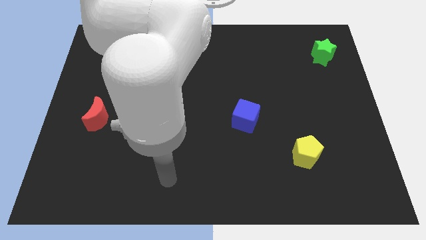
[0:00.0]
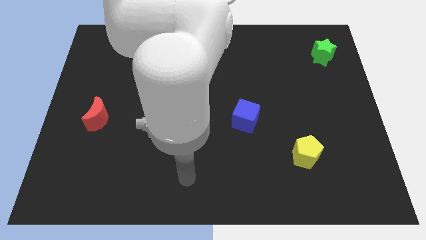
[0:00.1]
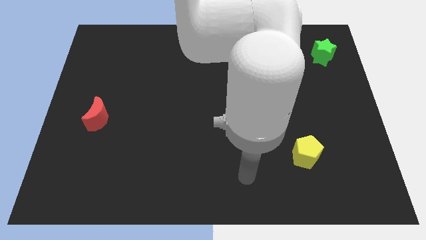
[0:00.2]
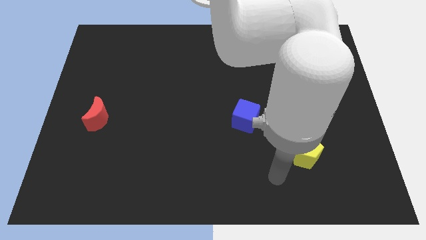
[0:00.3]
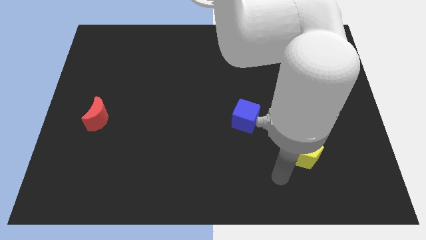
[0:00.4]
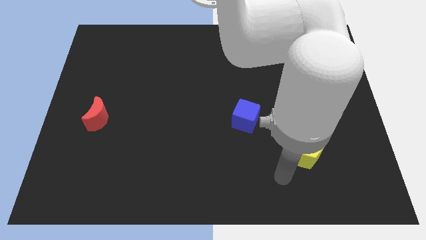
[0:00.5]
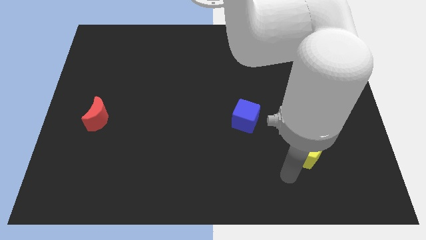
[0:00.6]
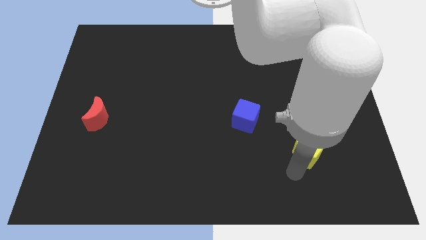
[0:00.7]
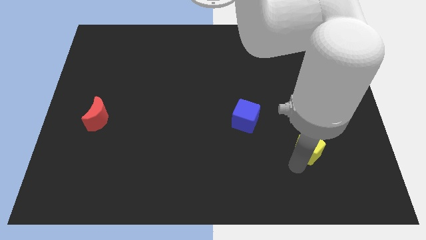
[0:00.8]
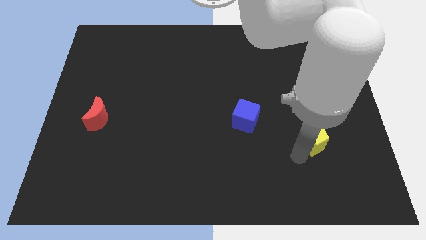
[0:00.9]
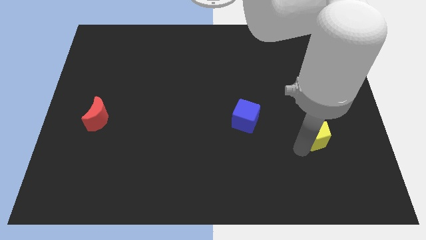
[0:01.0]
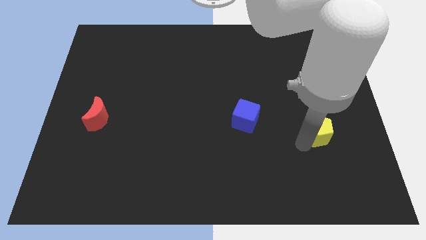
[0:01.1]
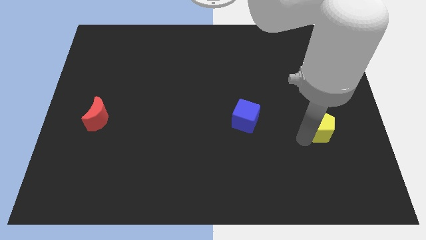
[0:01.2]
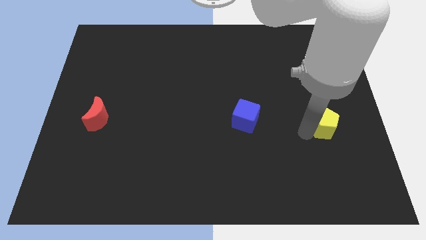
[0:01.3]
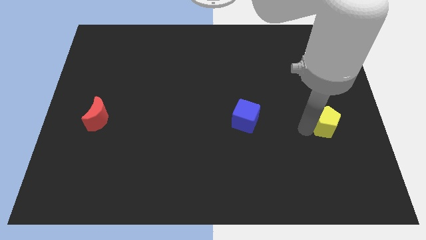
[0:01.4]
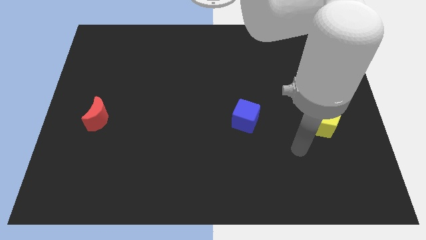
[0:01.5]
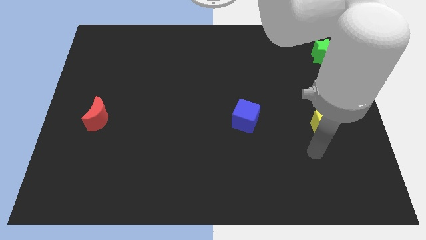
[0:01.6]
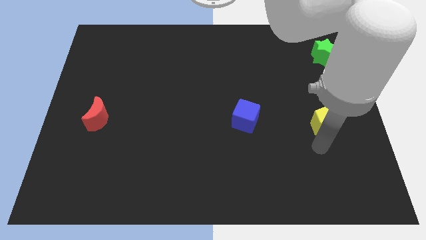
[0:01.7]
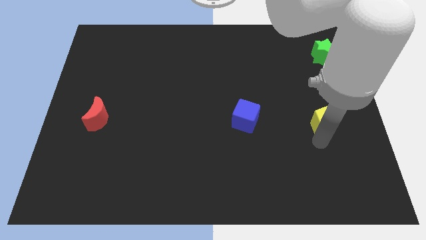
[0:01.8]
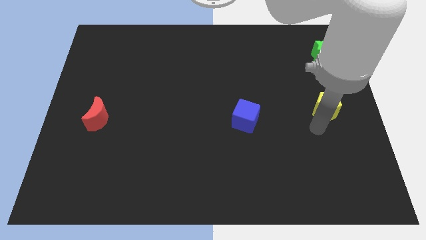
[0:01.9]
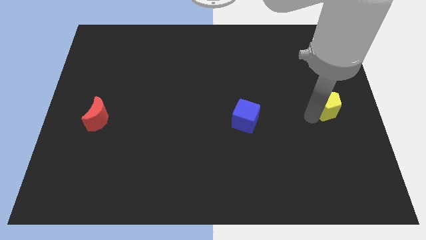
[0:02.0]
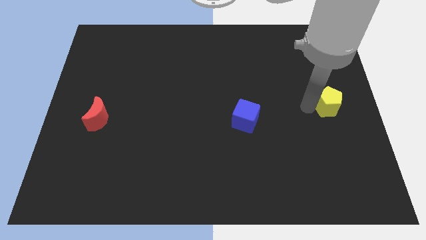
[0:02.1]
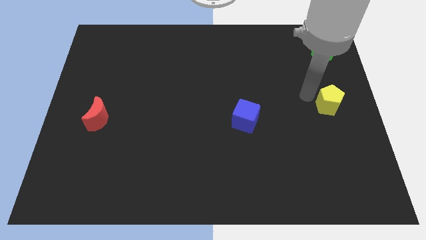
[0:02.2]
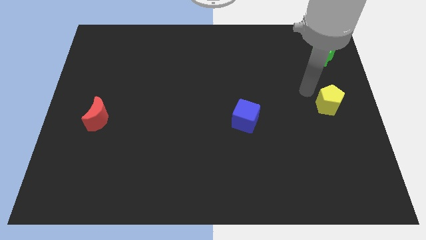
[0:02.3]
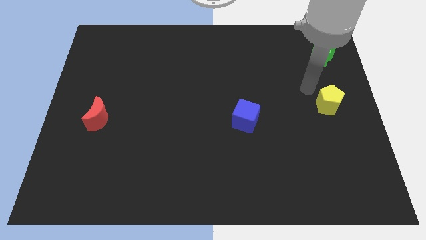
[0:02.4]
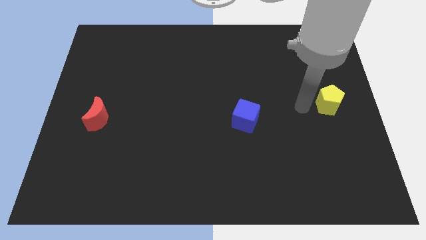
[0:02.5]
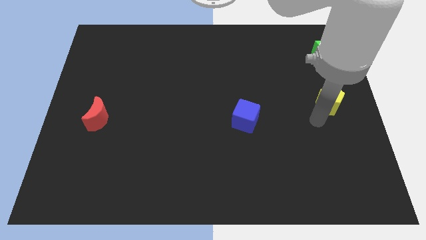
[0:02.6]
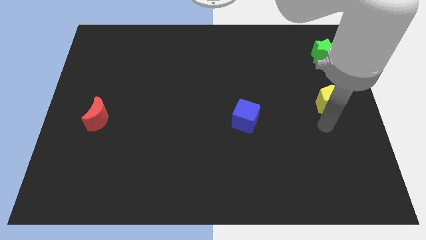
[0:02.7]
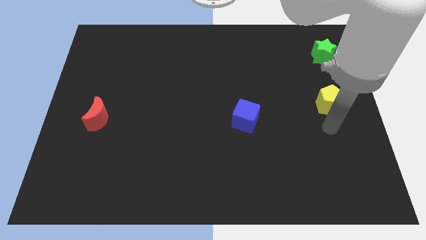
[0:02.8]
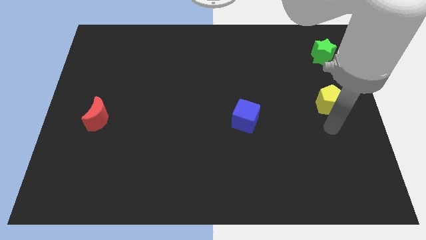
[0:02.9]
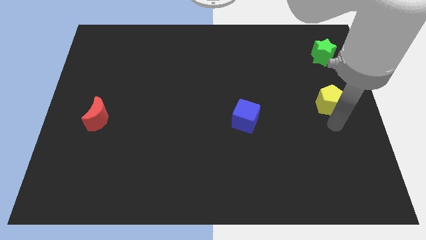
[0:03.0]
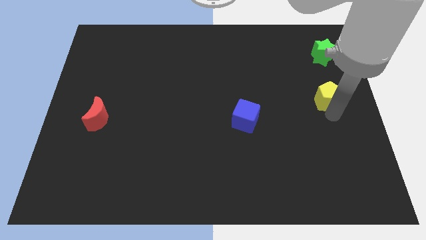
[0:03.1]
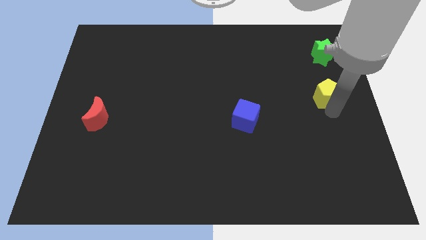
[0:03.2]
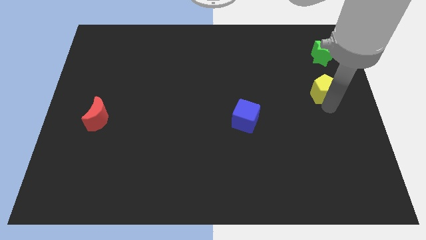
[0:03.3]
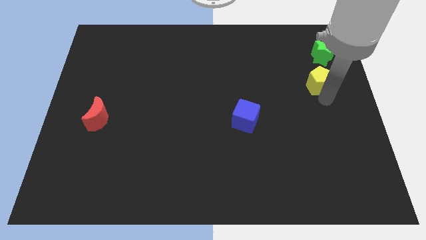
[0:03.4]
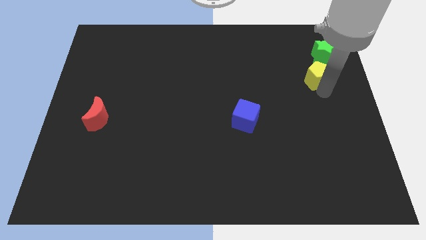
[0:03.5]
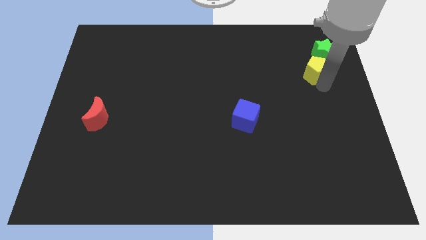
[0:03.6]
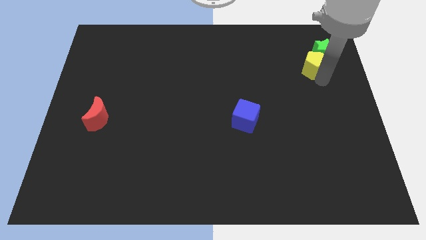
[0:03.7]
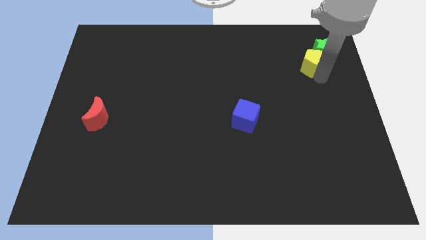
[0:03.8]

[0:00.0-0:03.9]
move the yellow block close to the green star

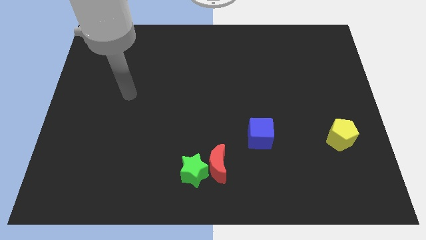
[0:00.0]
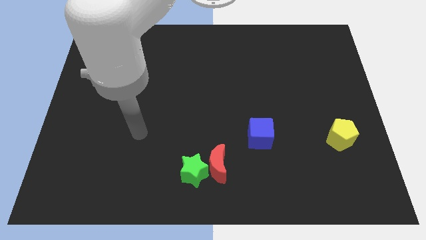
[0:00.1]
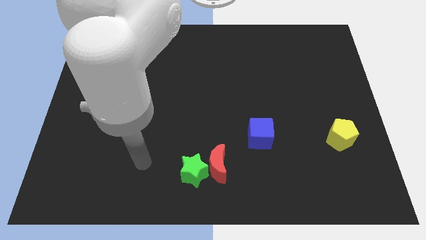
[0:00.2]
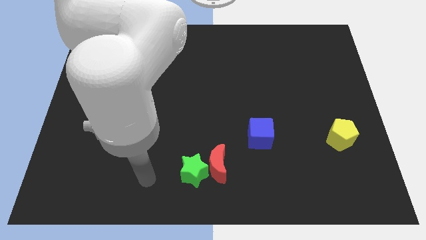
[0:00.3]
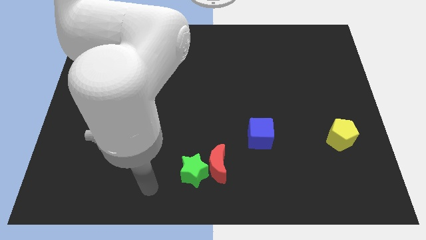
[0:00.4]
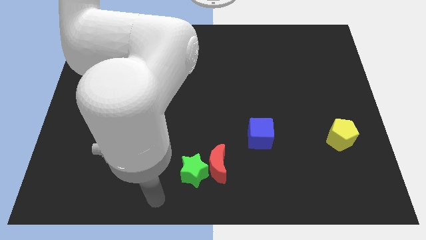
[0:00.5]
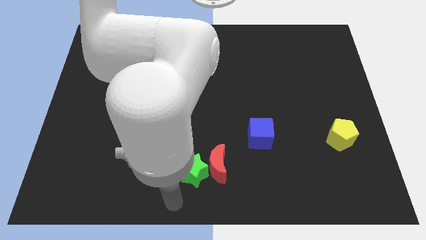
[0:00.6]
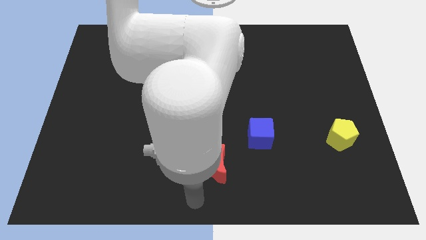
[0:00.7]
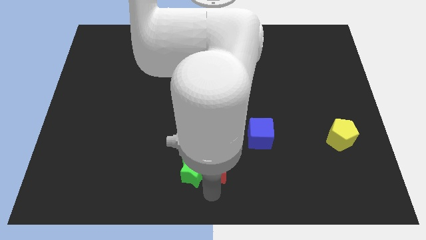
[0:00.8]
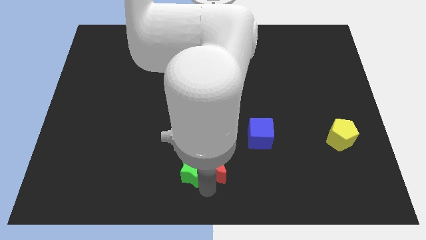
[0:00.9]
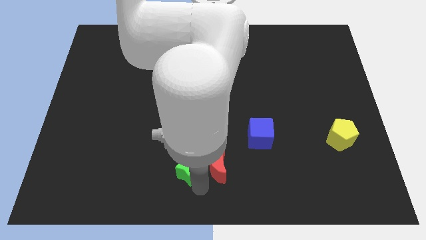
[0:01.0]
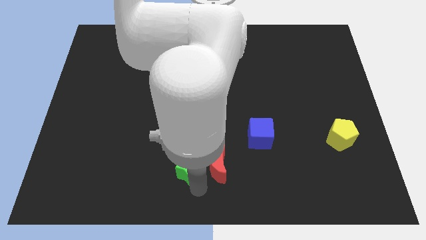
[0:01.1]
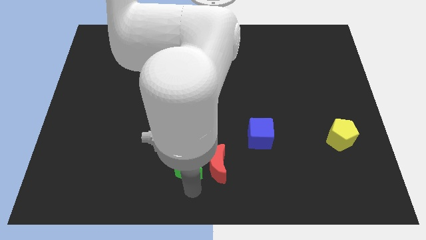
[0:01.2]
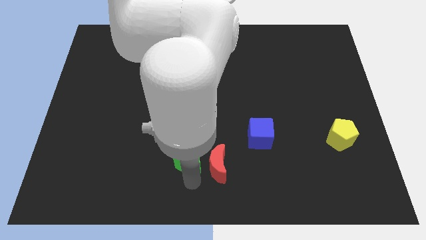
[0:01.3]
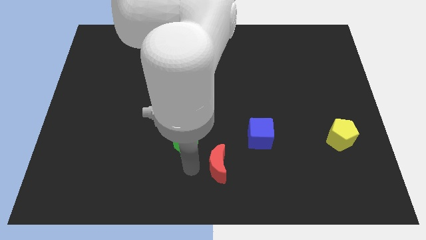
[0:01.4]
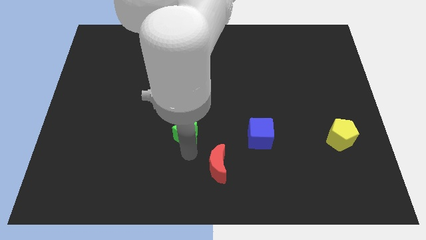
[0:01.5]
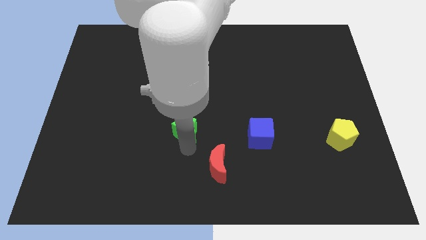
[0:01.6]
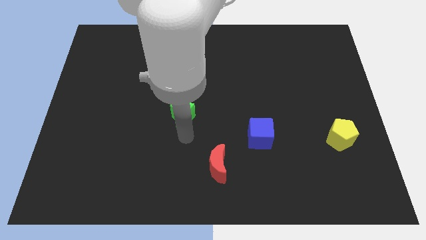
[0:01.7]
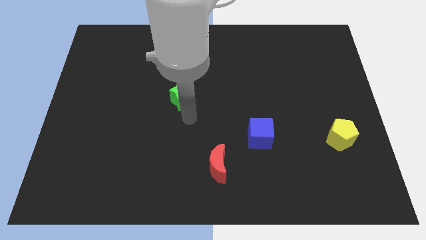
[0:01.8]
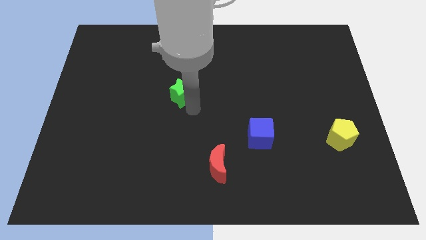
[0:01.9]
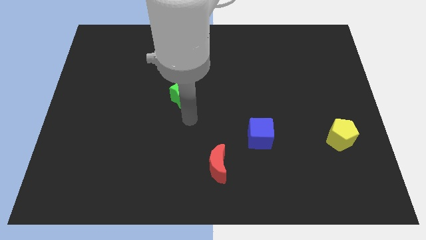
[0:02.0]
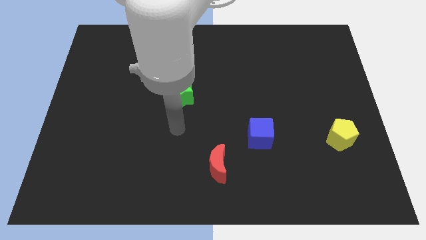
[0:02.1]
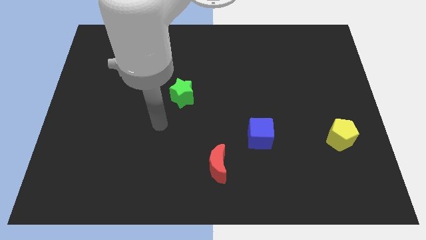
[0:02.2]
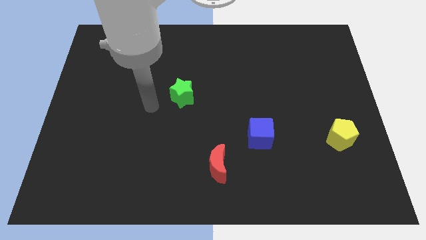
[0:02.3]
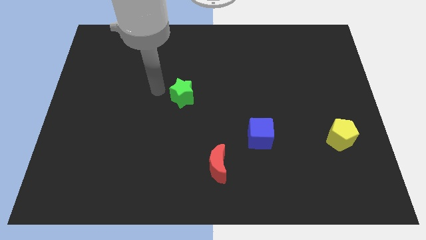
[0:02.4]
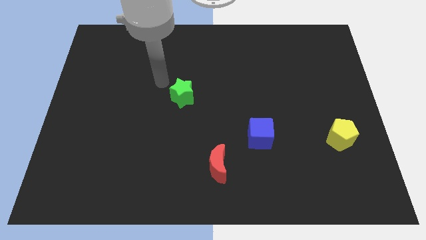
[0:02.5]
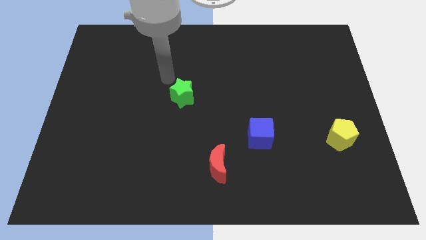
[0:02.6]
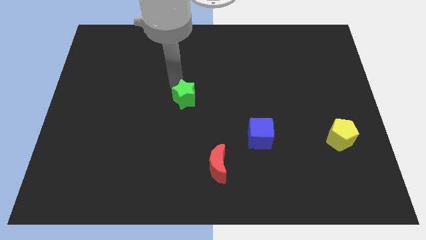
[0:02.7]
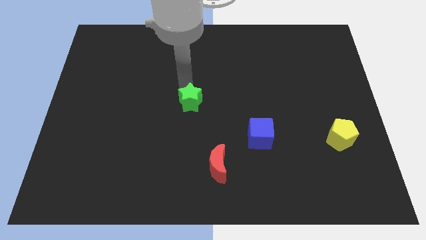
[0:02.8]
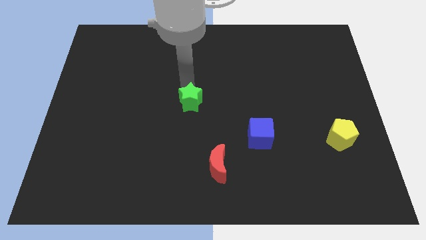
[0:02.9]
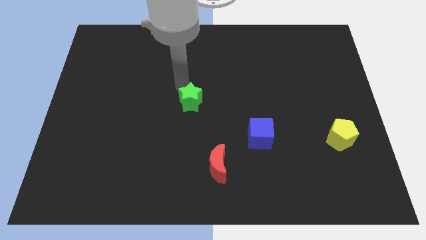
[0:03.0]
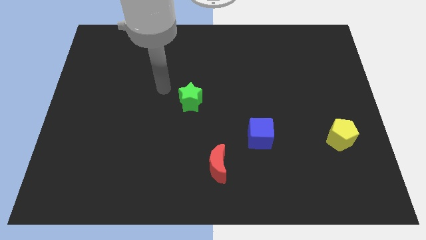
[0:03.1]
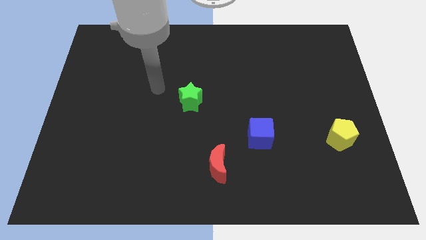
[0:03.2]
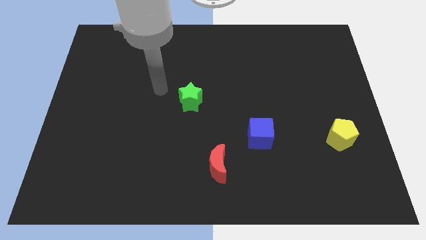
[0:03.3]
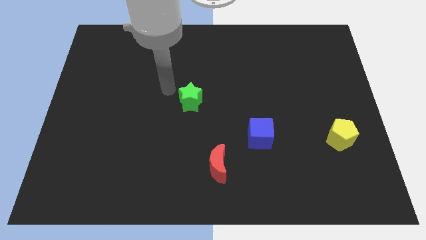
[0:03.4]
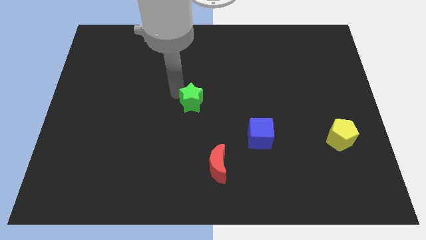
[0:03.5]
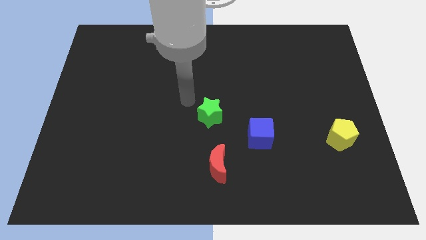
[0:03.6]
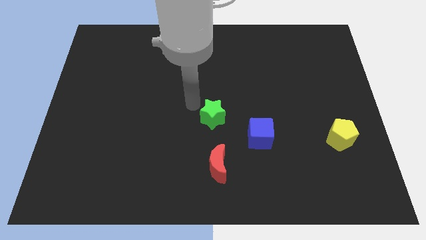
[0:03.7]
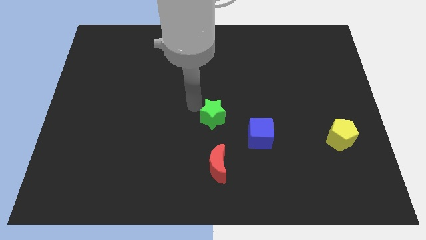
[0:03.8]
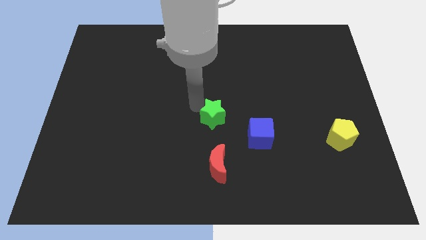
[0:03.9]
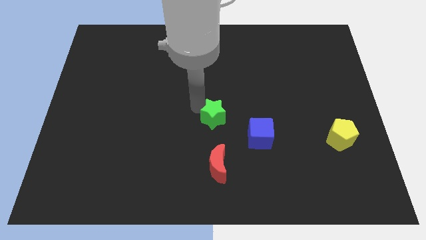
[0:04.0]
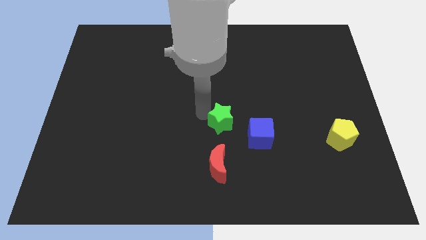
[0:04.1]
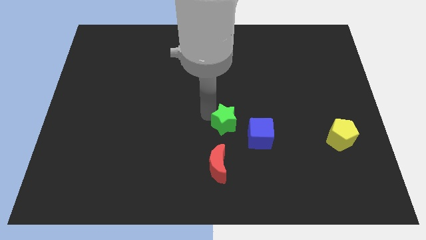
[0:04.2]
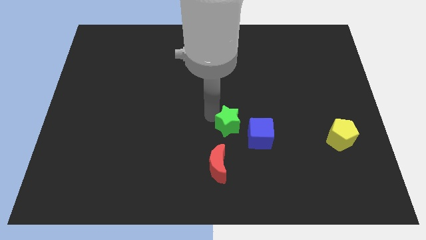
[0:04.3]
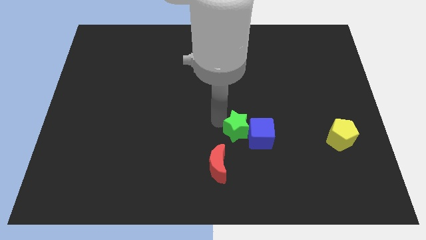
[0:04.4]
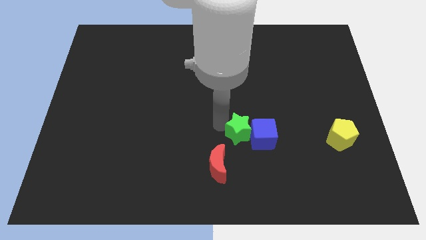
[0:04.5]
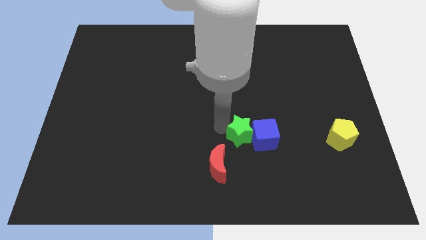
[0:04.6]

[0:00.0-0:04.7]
push the star towards the blue cube

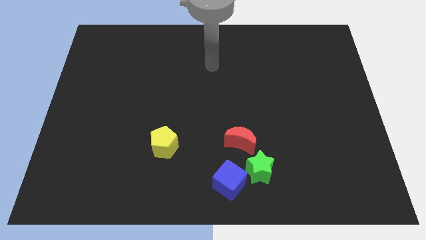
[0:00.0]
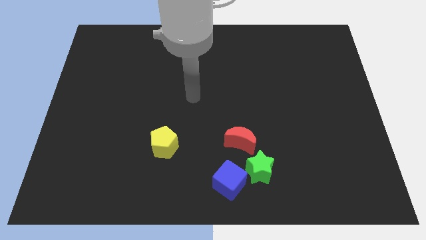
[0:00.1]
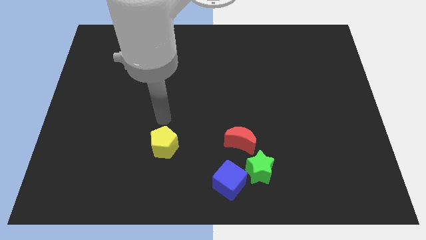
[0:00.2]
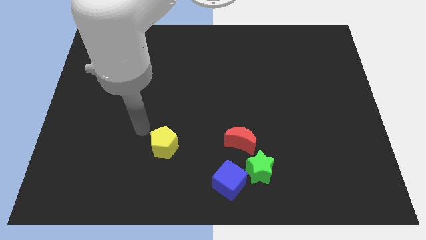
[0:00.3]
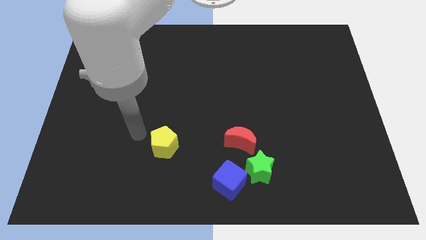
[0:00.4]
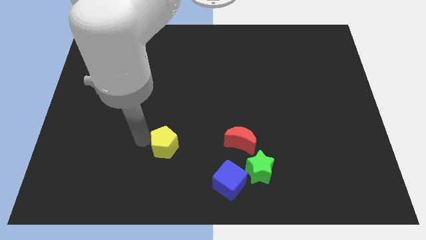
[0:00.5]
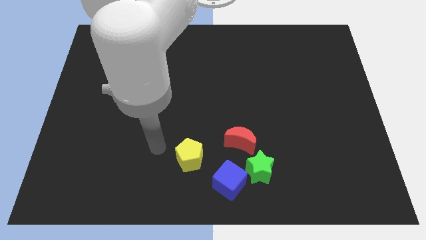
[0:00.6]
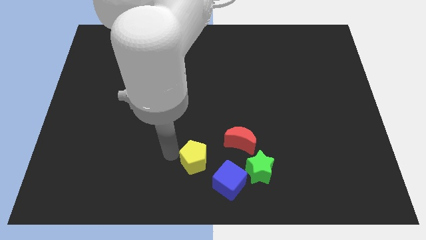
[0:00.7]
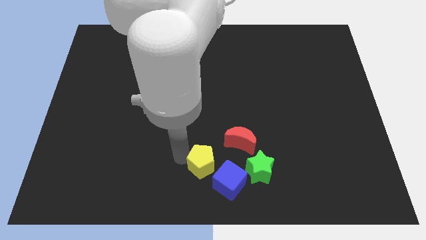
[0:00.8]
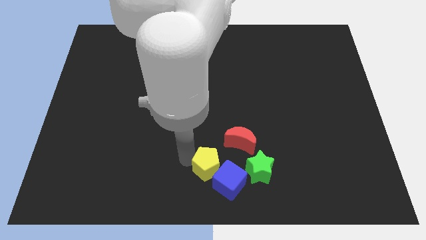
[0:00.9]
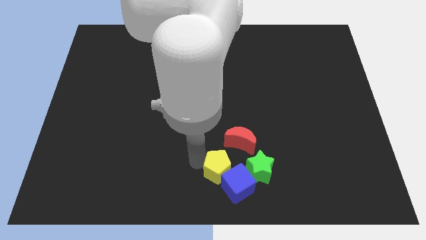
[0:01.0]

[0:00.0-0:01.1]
slide the pentagon to the cube
